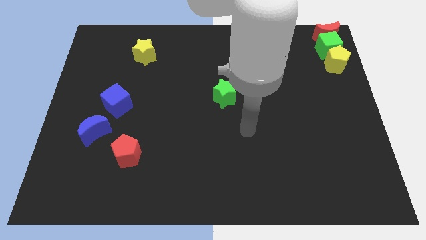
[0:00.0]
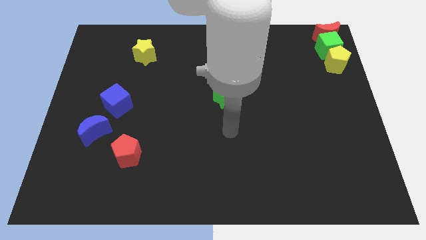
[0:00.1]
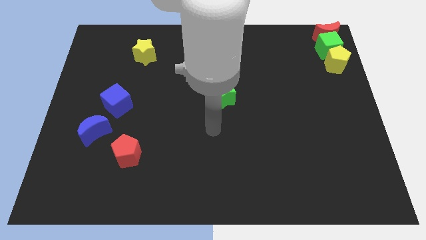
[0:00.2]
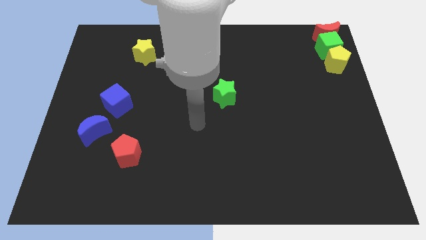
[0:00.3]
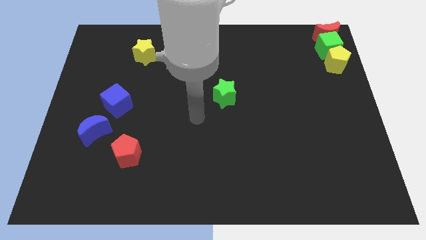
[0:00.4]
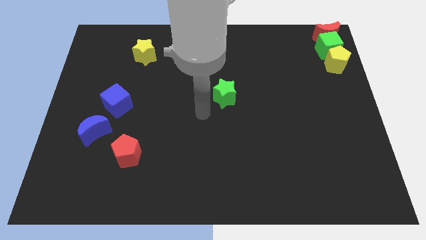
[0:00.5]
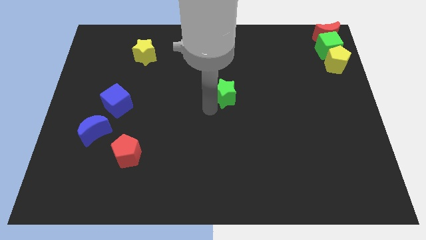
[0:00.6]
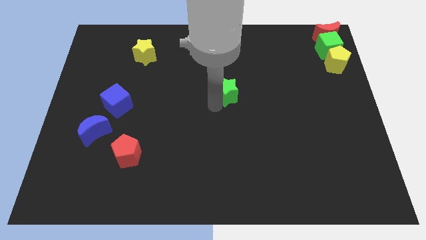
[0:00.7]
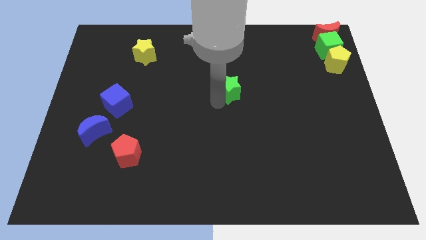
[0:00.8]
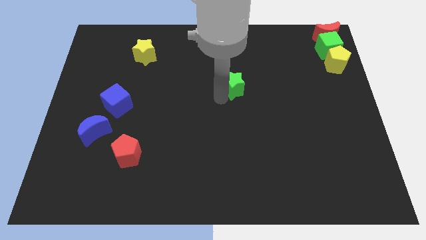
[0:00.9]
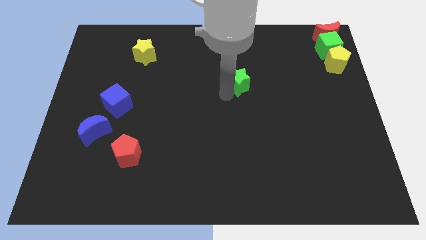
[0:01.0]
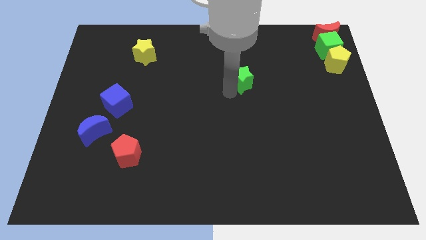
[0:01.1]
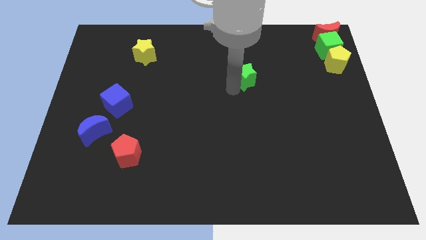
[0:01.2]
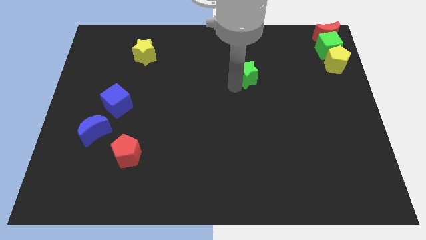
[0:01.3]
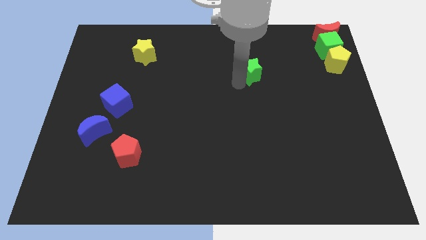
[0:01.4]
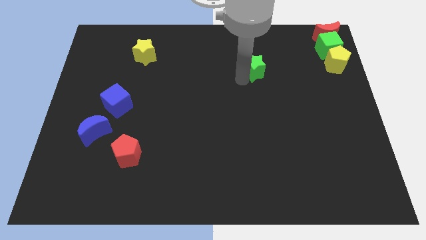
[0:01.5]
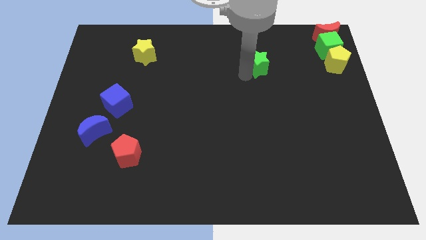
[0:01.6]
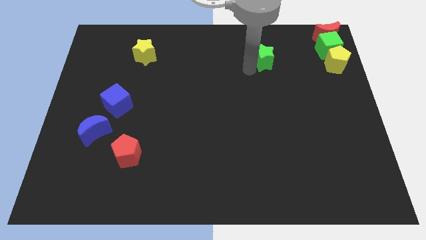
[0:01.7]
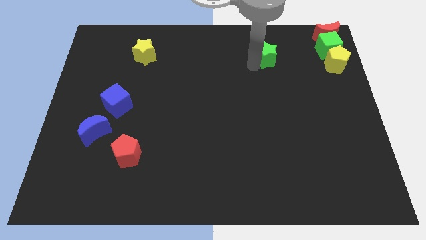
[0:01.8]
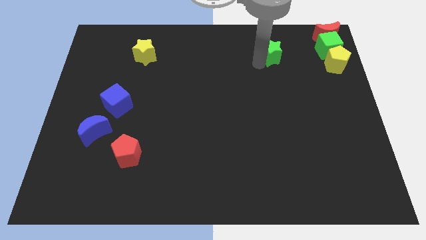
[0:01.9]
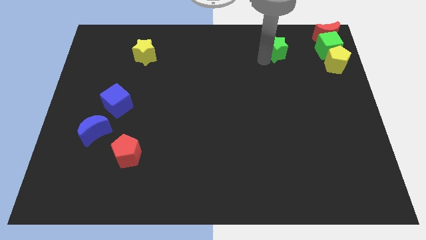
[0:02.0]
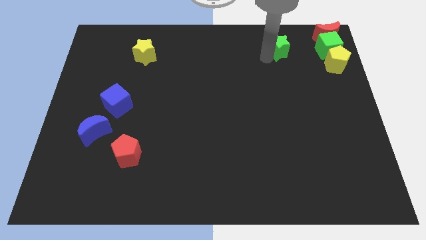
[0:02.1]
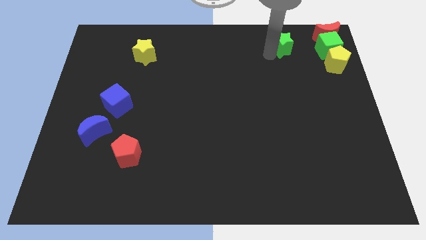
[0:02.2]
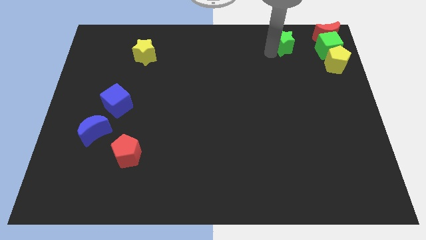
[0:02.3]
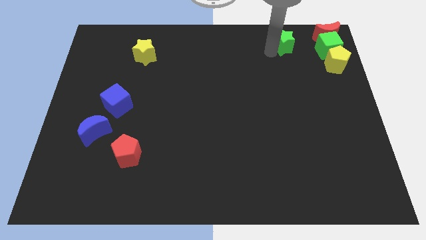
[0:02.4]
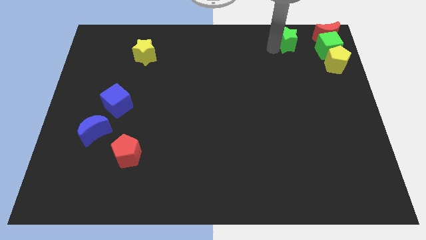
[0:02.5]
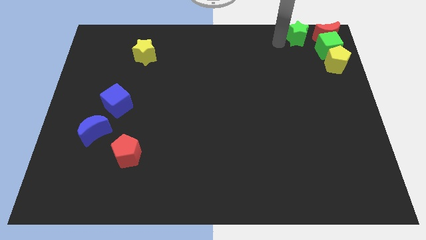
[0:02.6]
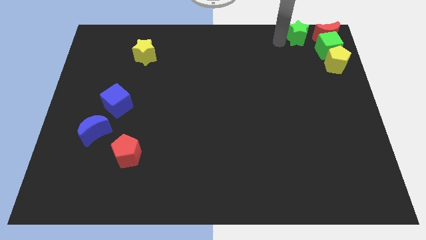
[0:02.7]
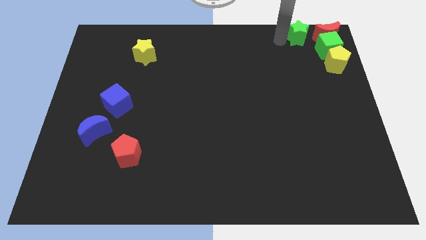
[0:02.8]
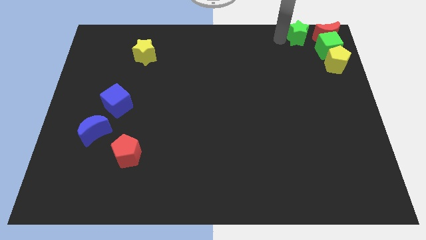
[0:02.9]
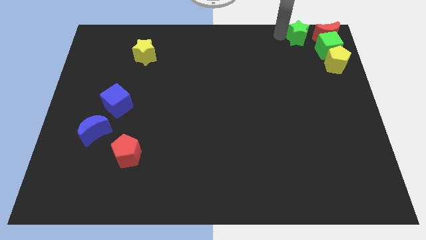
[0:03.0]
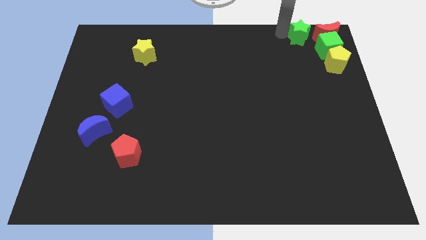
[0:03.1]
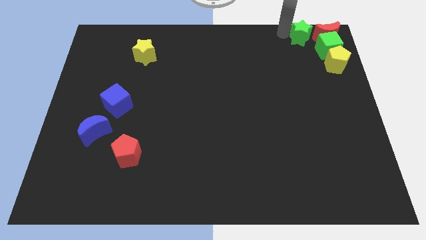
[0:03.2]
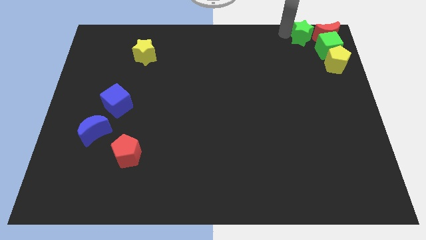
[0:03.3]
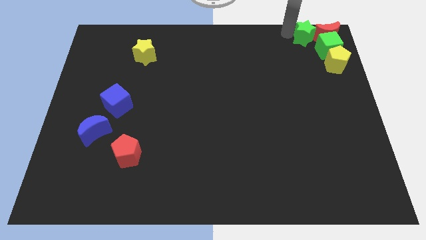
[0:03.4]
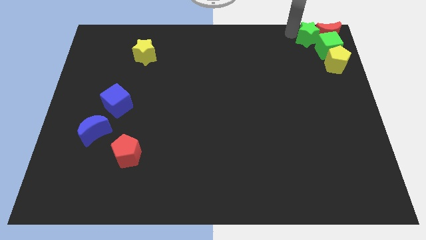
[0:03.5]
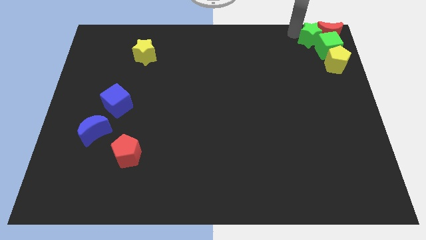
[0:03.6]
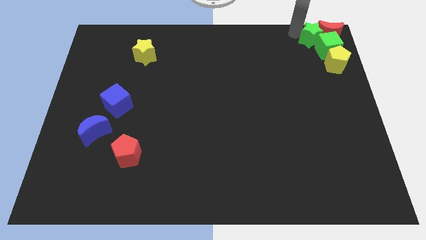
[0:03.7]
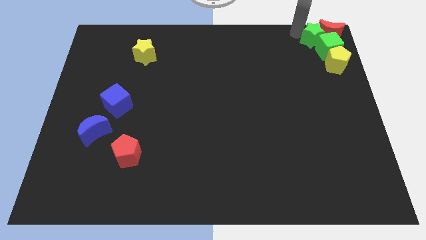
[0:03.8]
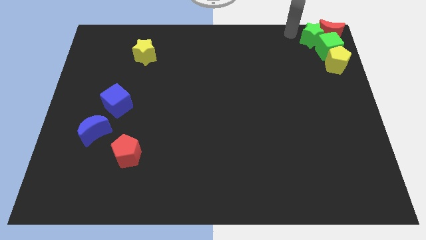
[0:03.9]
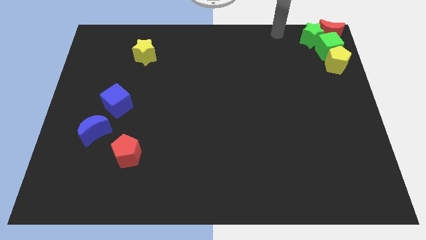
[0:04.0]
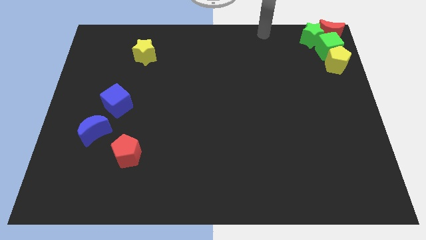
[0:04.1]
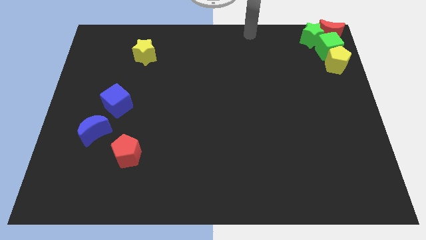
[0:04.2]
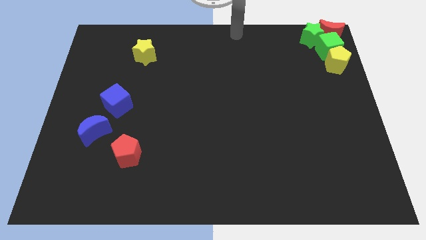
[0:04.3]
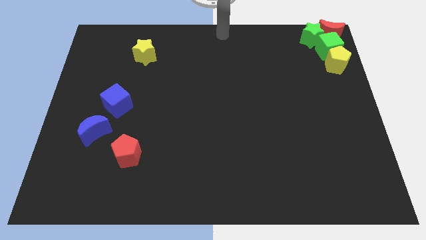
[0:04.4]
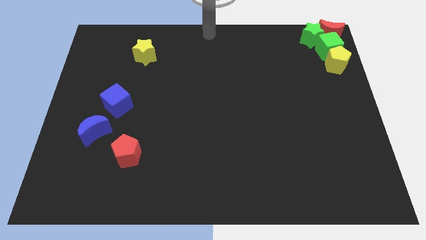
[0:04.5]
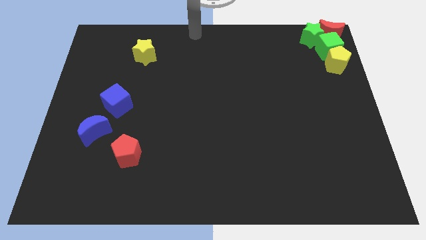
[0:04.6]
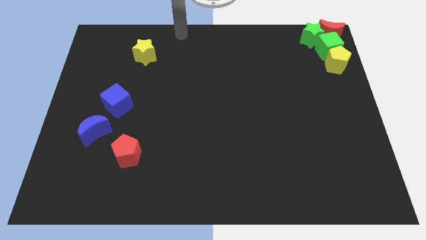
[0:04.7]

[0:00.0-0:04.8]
push the green star into the group of blocks

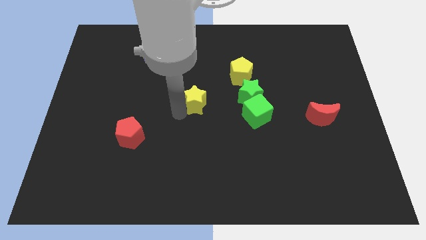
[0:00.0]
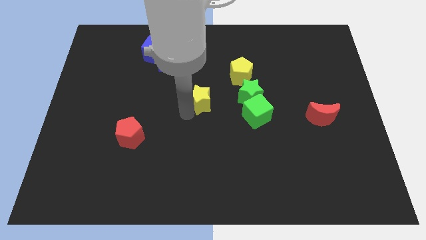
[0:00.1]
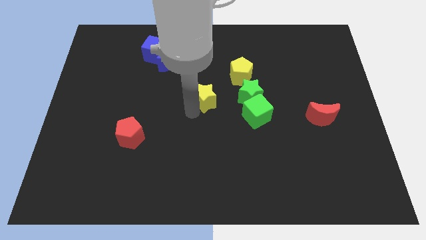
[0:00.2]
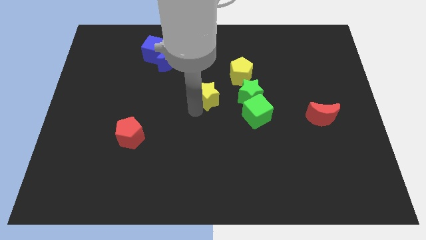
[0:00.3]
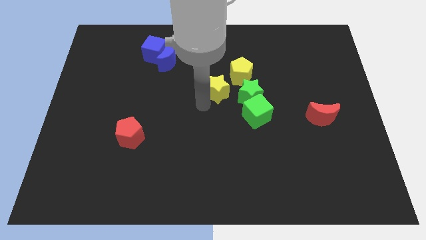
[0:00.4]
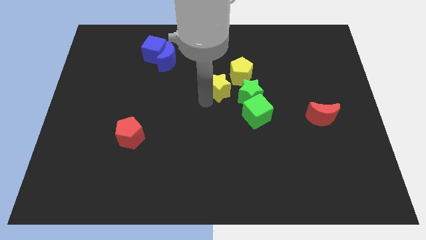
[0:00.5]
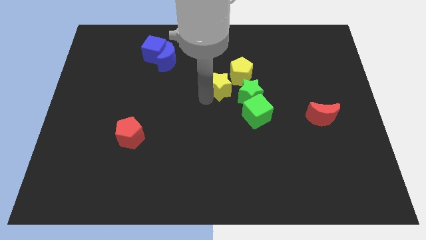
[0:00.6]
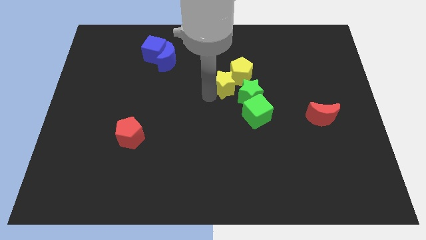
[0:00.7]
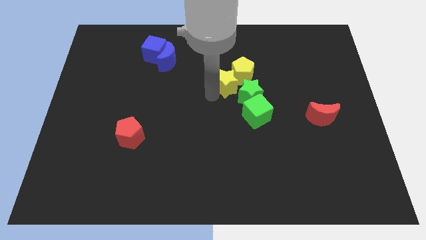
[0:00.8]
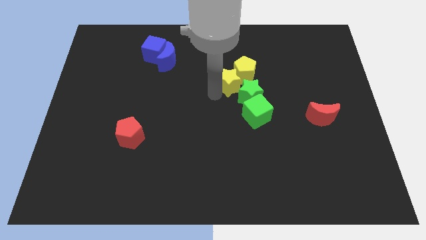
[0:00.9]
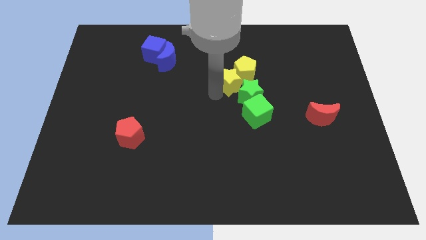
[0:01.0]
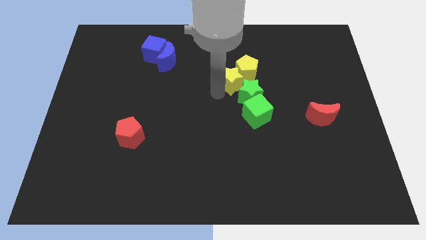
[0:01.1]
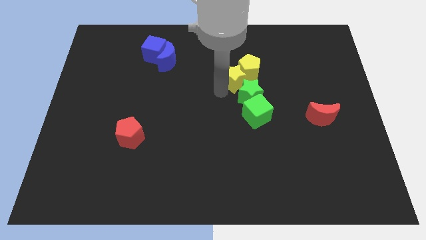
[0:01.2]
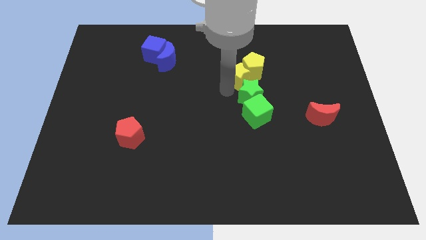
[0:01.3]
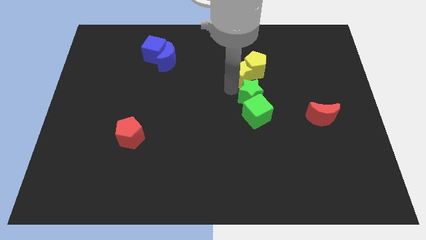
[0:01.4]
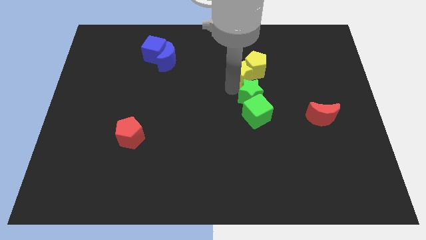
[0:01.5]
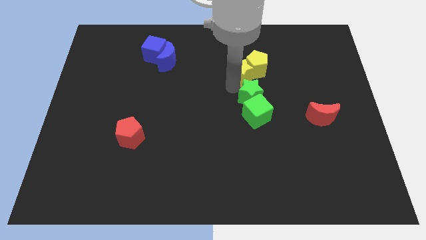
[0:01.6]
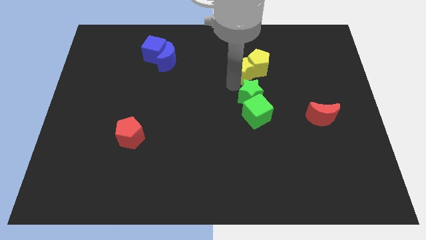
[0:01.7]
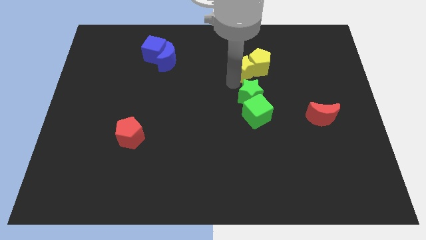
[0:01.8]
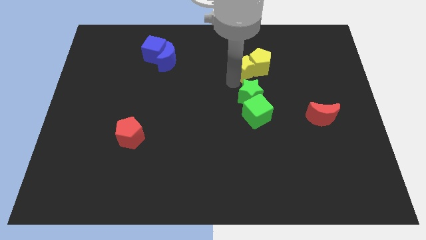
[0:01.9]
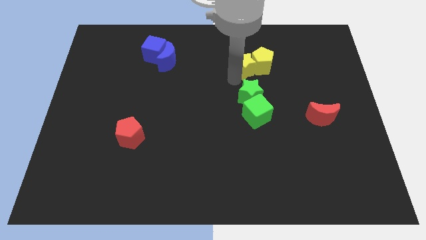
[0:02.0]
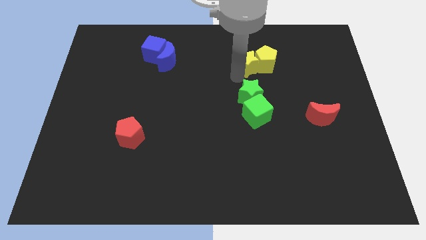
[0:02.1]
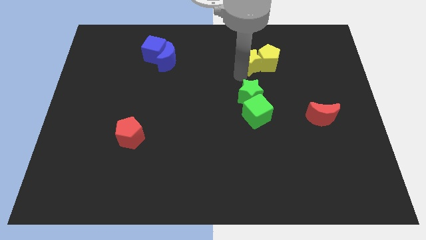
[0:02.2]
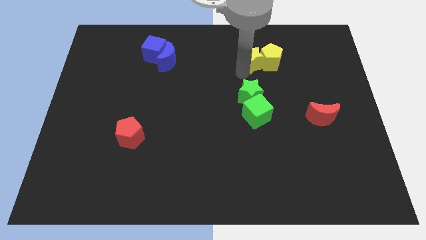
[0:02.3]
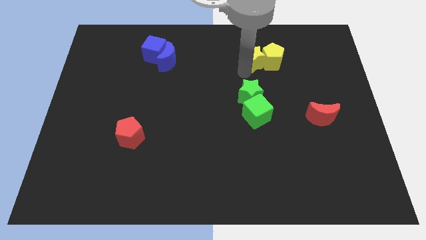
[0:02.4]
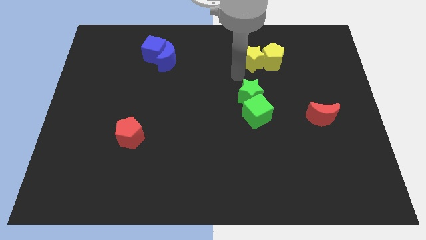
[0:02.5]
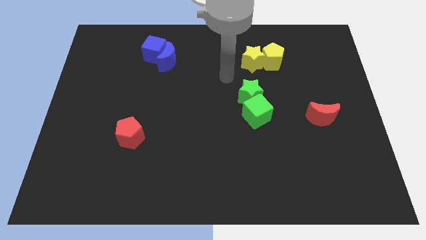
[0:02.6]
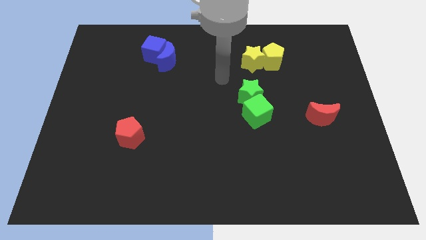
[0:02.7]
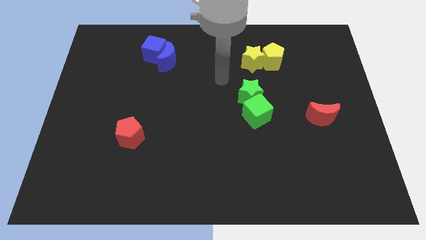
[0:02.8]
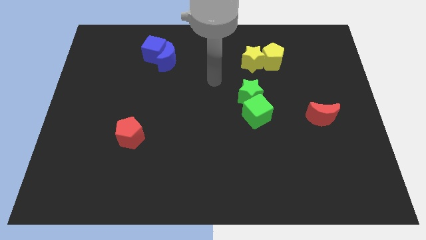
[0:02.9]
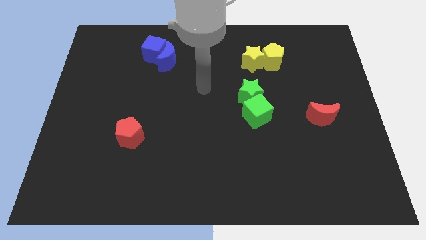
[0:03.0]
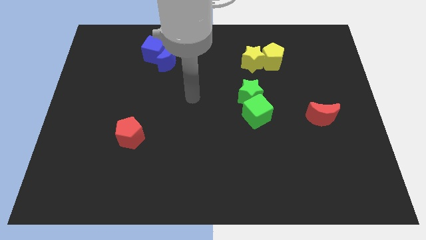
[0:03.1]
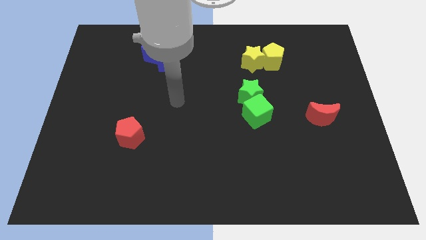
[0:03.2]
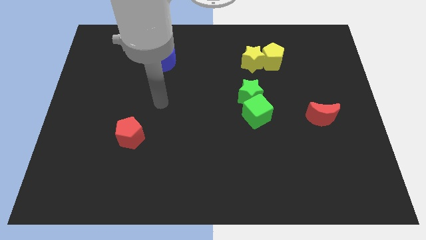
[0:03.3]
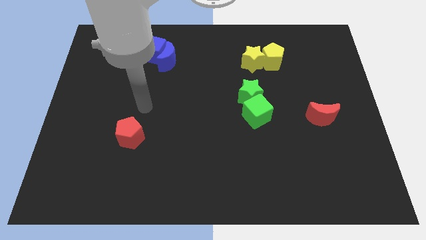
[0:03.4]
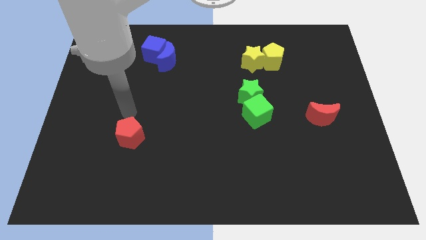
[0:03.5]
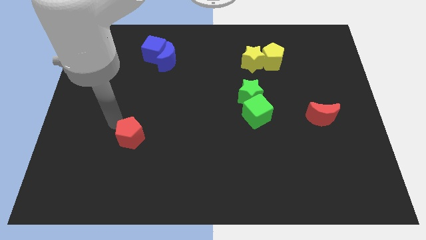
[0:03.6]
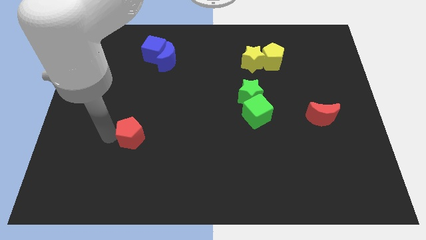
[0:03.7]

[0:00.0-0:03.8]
slide the yellow star into the yellow pentagon

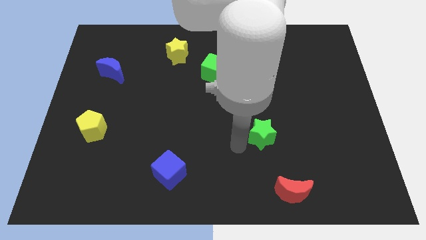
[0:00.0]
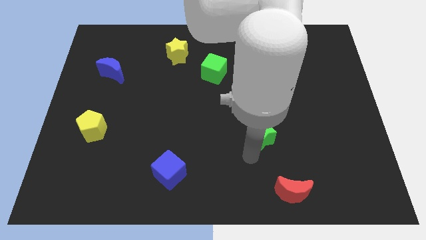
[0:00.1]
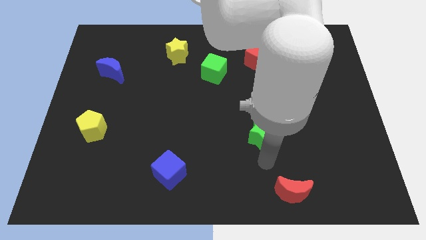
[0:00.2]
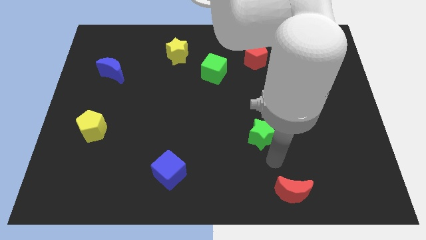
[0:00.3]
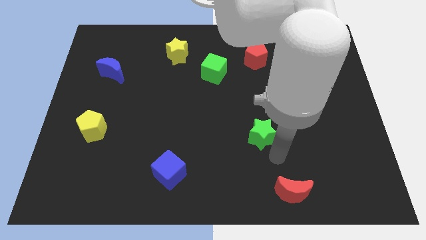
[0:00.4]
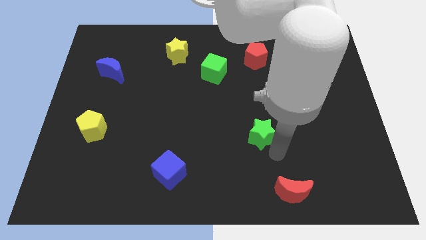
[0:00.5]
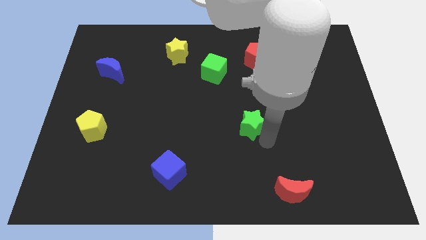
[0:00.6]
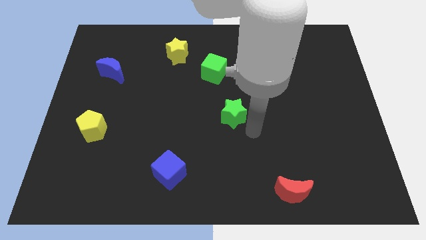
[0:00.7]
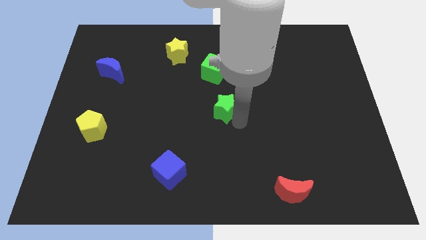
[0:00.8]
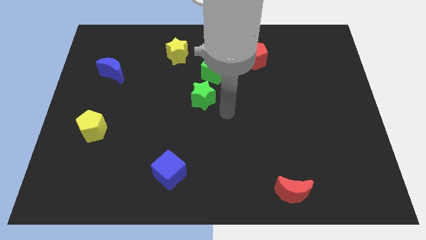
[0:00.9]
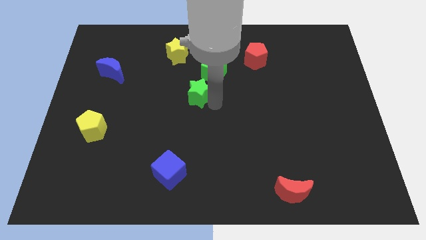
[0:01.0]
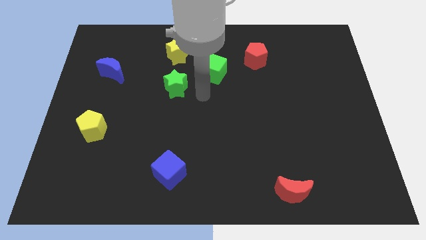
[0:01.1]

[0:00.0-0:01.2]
push green star to the bottom left of green cube
